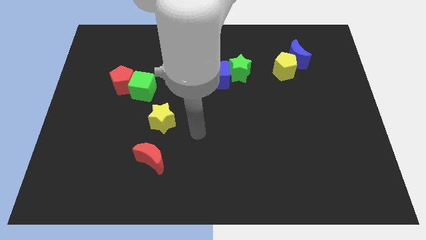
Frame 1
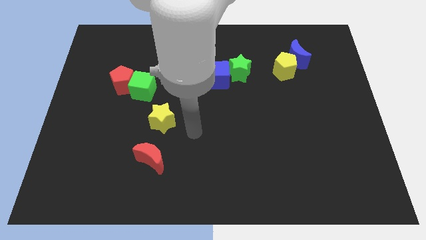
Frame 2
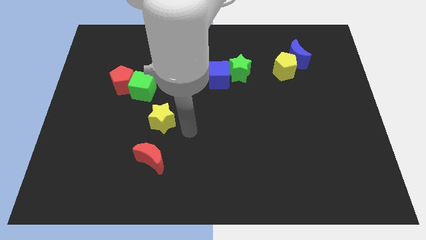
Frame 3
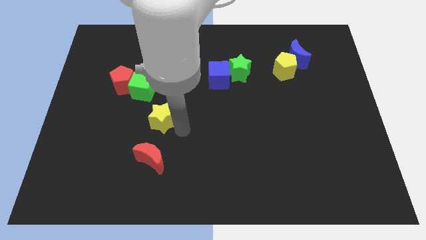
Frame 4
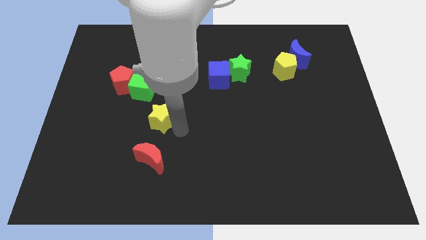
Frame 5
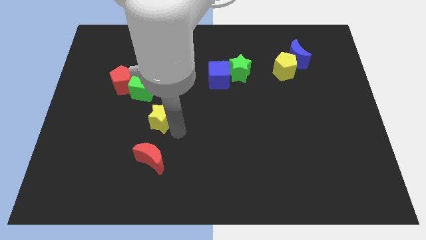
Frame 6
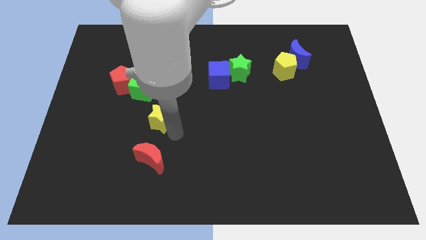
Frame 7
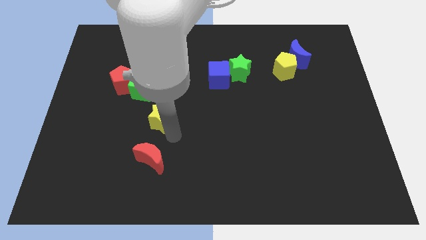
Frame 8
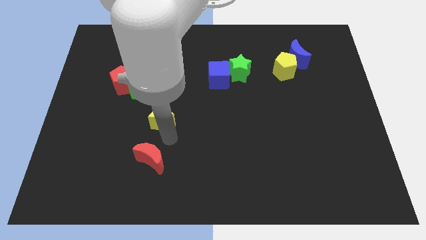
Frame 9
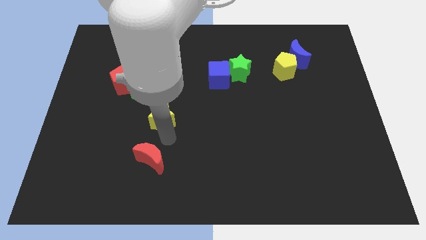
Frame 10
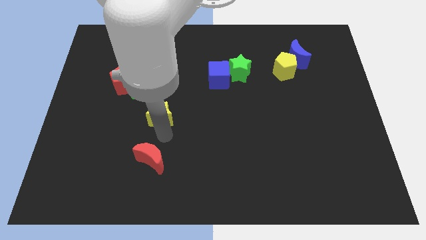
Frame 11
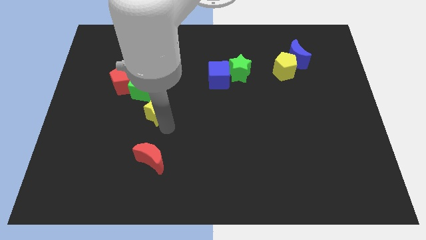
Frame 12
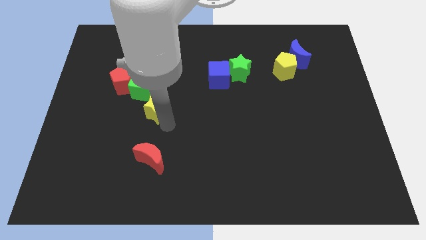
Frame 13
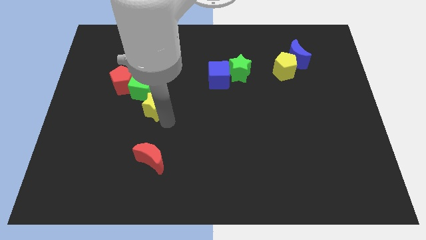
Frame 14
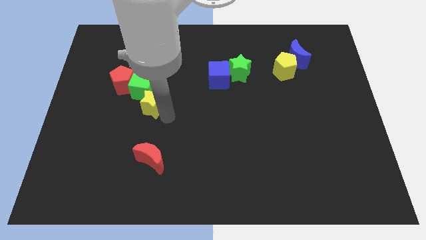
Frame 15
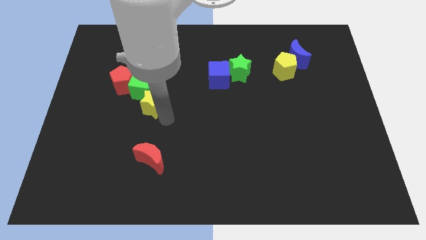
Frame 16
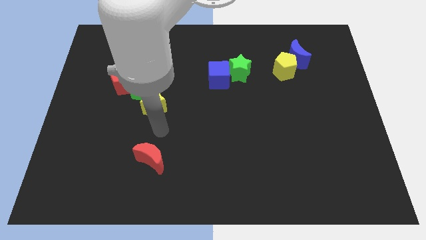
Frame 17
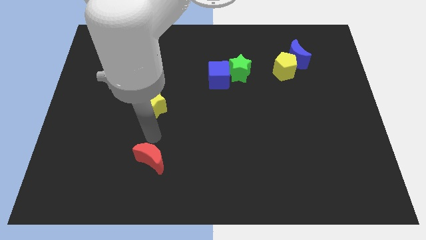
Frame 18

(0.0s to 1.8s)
push the yellow star into the green cube

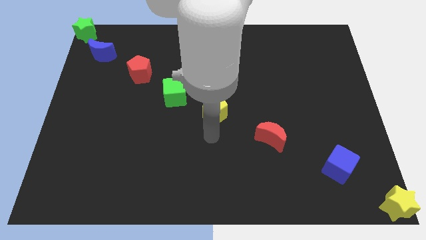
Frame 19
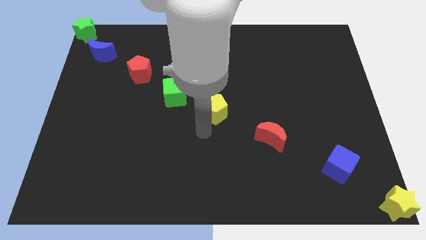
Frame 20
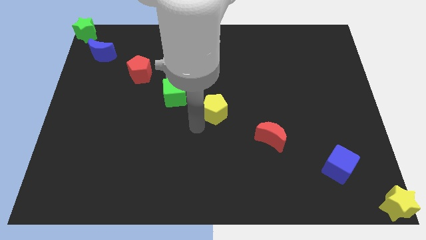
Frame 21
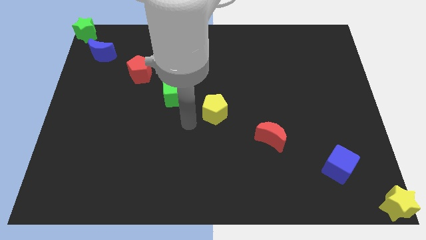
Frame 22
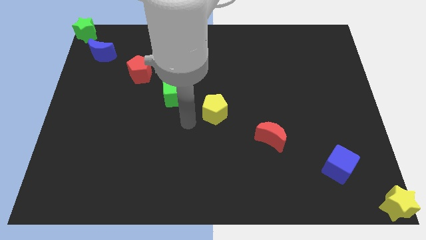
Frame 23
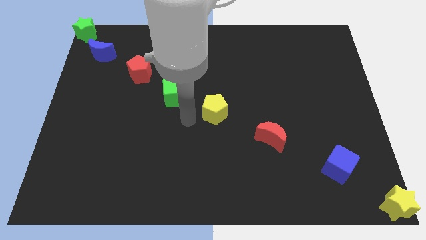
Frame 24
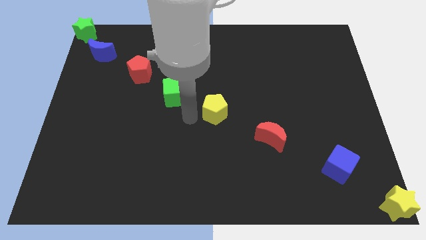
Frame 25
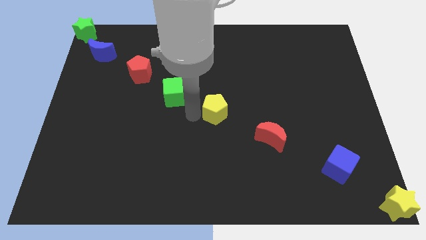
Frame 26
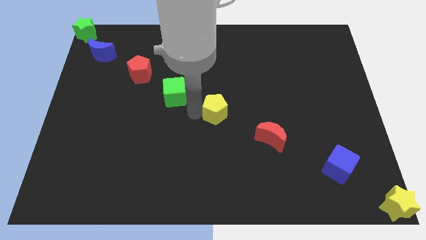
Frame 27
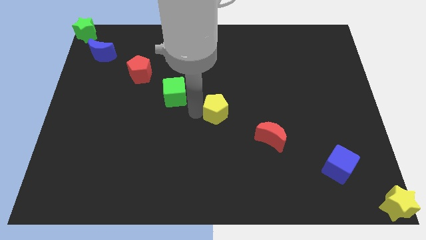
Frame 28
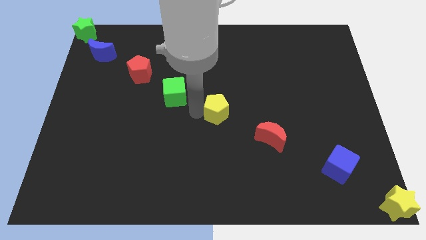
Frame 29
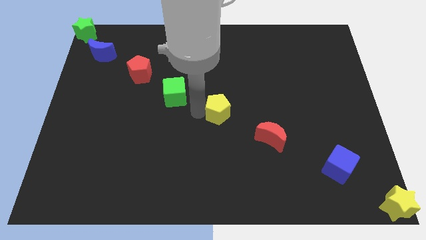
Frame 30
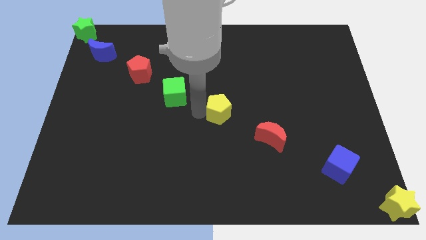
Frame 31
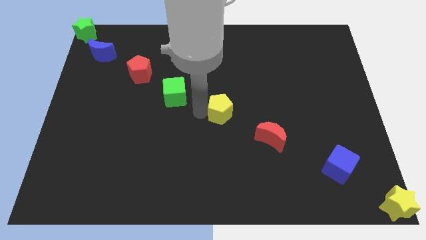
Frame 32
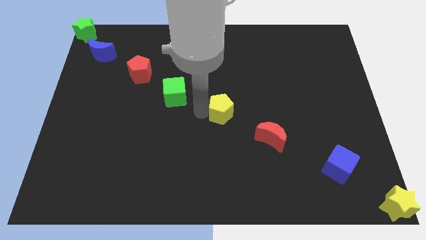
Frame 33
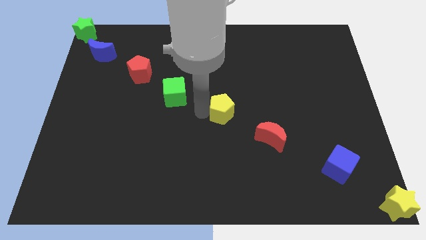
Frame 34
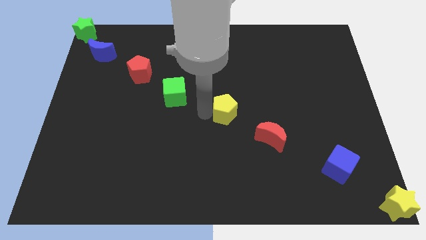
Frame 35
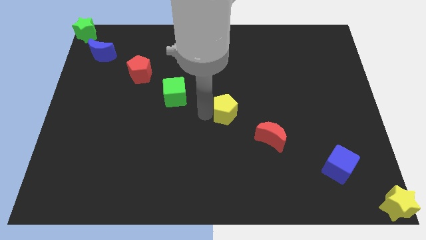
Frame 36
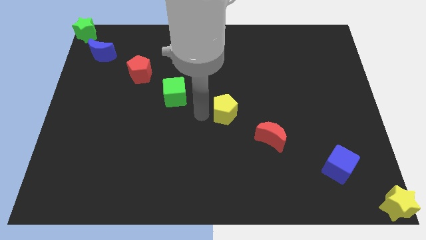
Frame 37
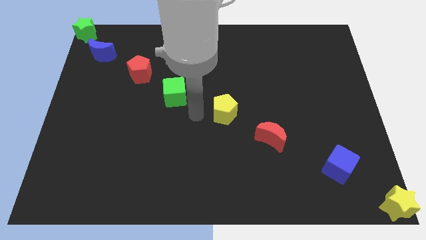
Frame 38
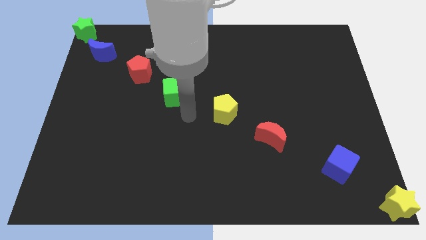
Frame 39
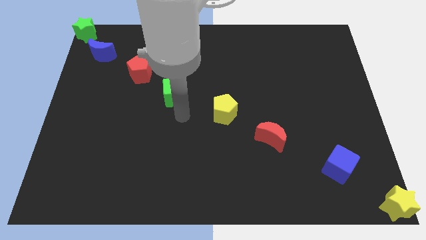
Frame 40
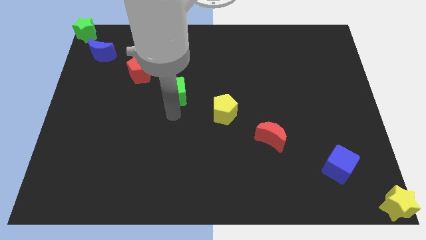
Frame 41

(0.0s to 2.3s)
adjust the yellow pentagon

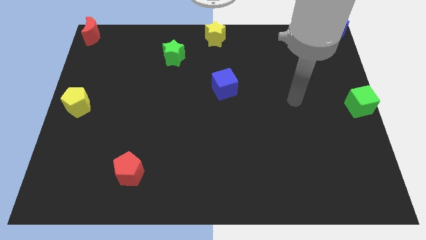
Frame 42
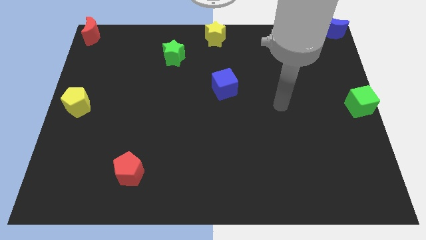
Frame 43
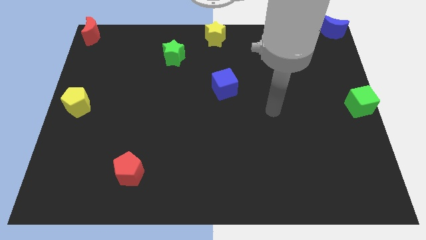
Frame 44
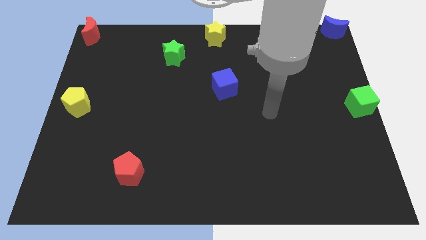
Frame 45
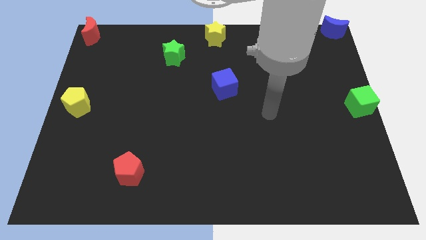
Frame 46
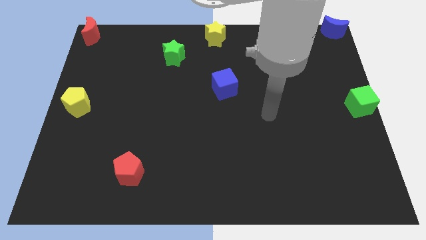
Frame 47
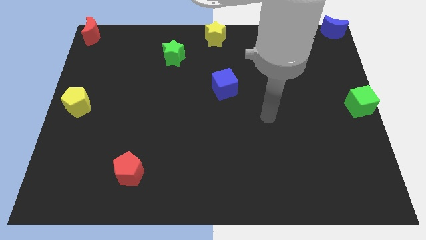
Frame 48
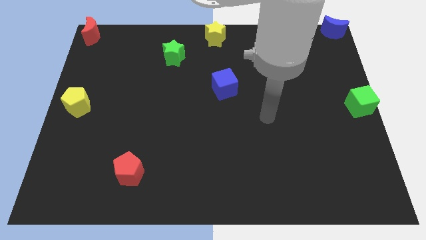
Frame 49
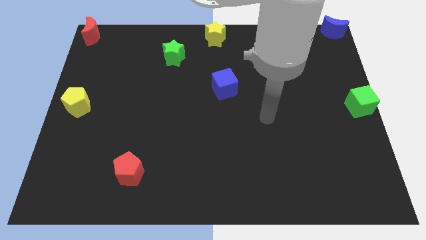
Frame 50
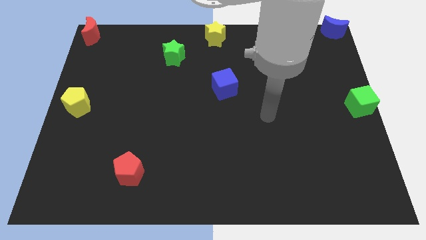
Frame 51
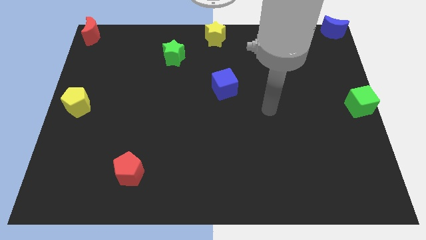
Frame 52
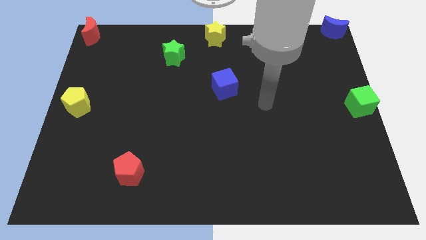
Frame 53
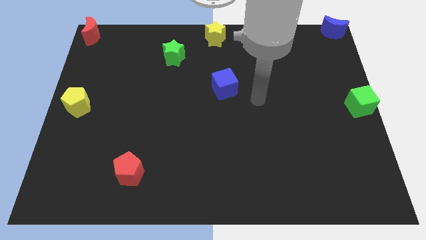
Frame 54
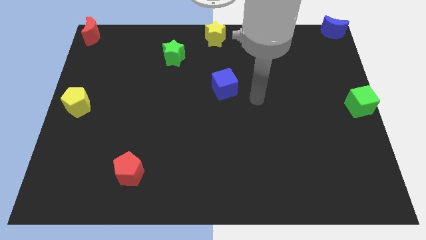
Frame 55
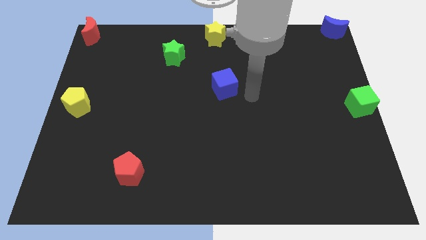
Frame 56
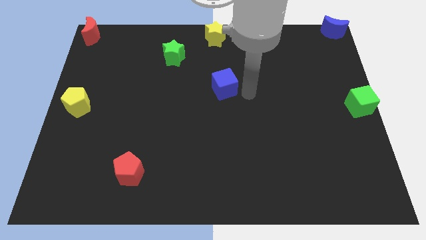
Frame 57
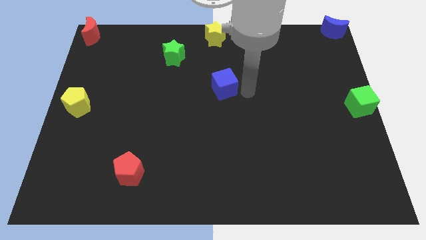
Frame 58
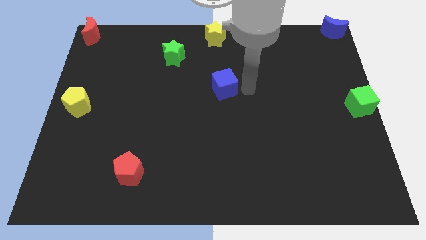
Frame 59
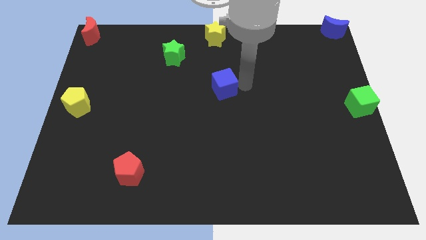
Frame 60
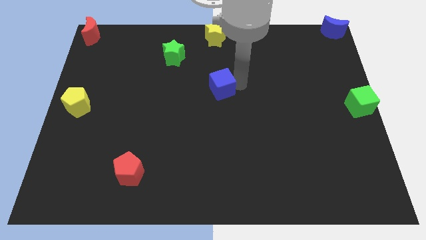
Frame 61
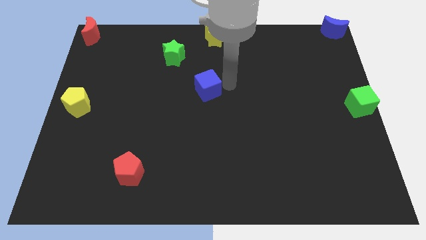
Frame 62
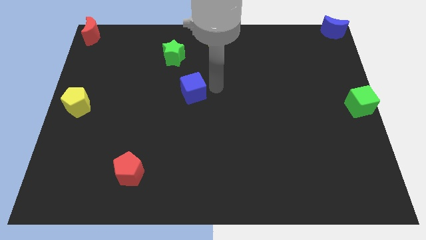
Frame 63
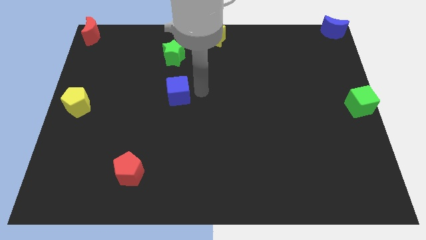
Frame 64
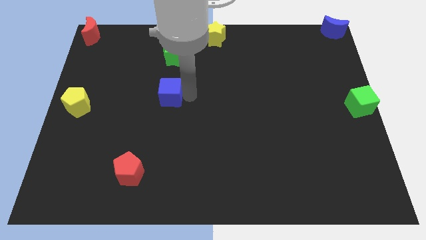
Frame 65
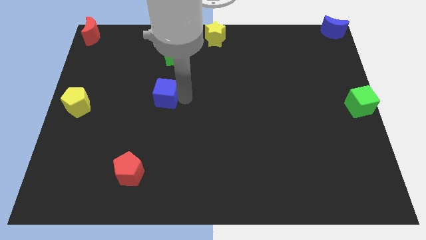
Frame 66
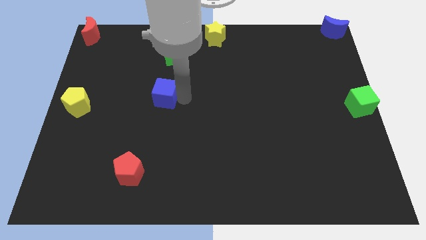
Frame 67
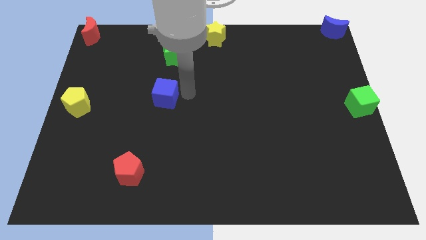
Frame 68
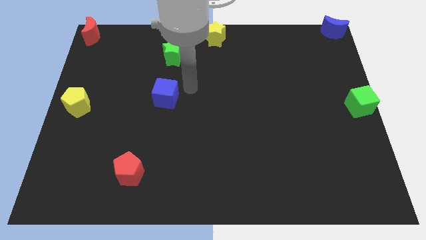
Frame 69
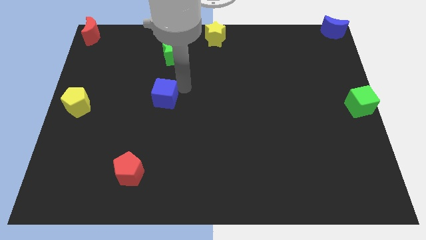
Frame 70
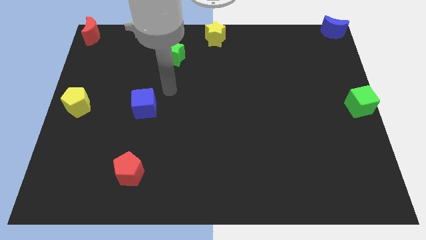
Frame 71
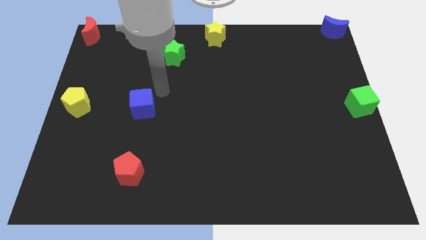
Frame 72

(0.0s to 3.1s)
push the blue cube to the right of the yellow pentagon

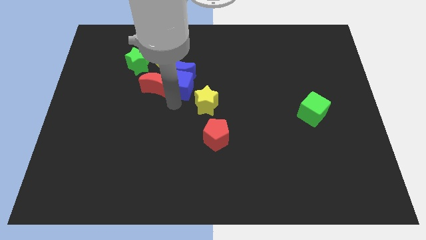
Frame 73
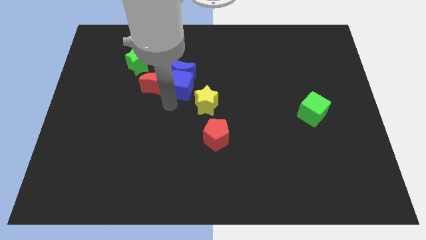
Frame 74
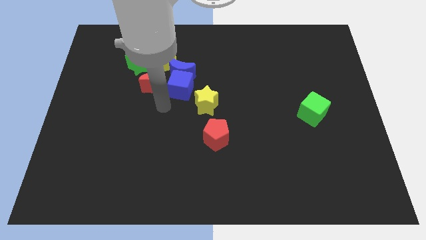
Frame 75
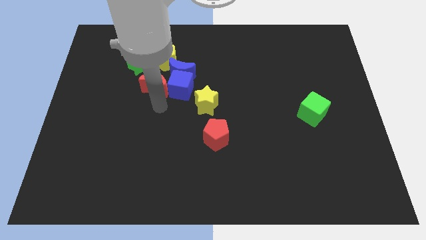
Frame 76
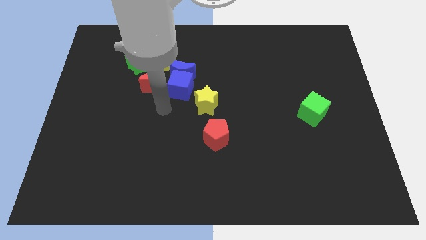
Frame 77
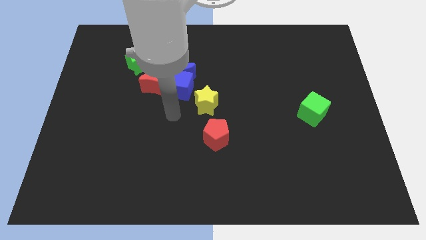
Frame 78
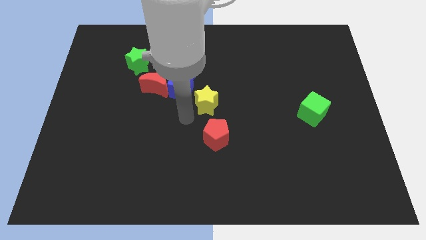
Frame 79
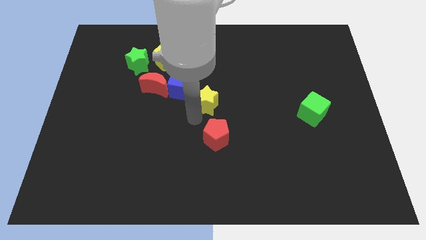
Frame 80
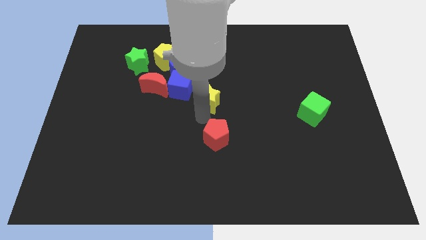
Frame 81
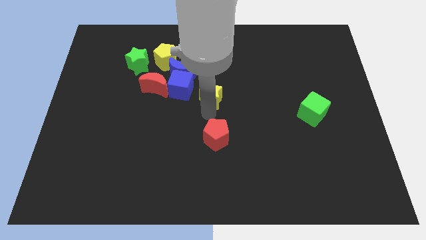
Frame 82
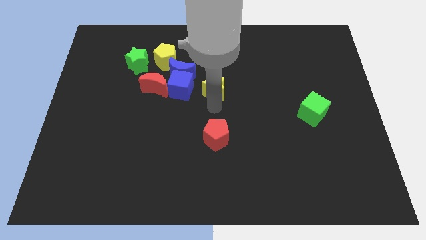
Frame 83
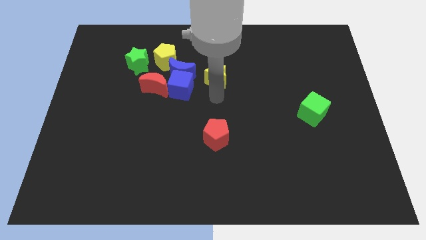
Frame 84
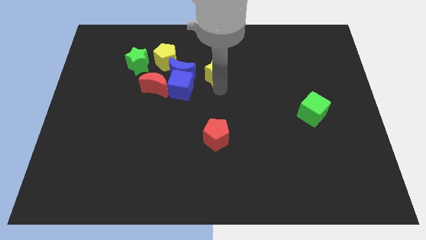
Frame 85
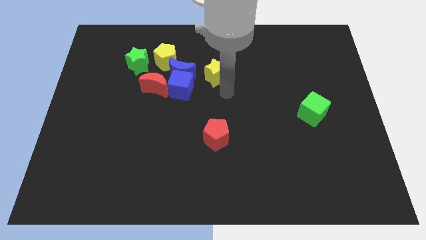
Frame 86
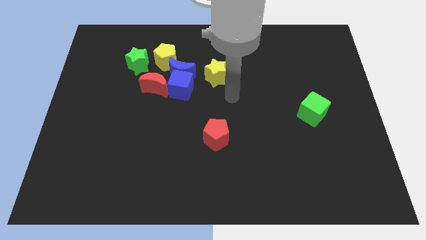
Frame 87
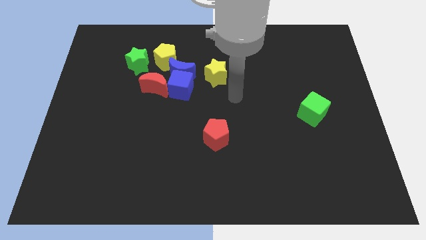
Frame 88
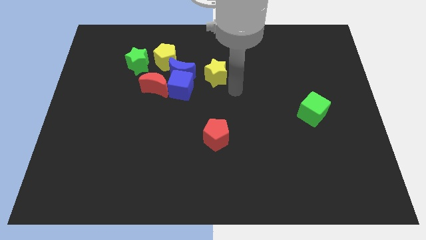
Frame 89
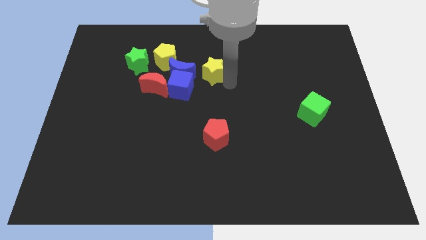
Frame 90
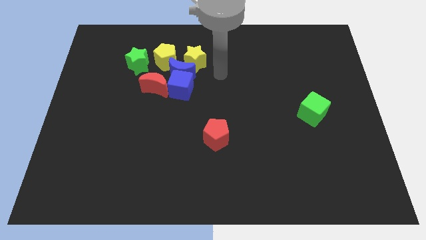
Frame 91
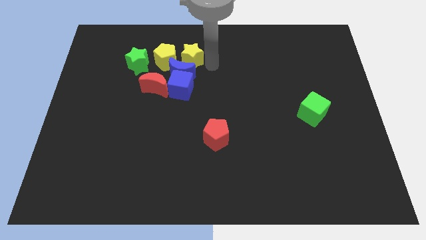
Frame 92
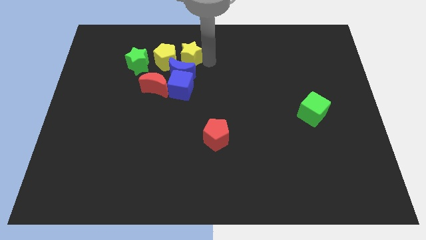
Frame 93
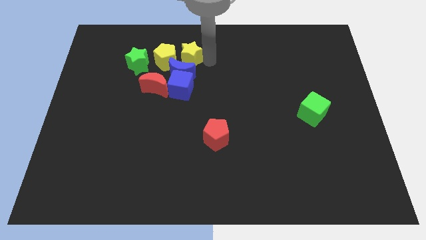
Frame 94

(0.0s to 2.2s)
move yellow star right beside the yellow pentagon
